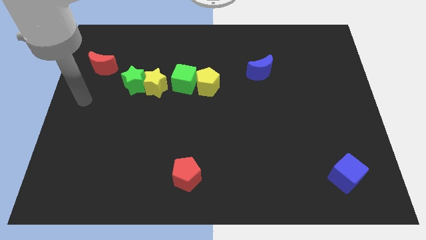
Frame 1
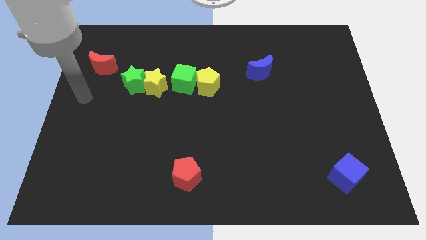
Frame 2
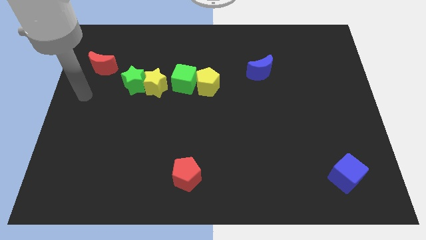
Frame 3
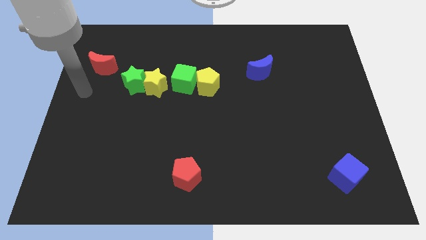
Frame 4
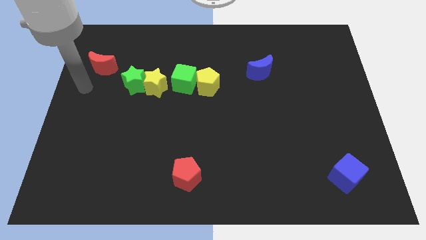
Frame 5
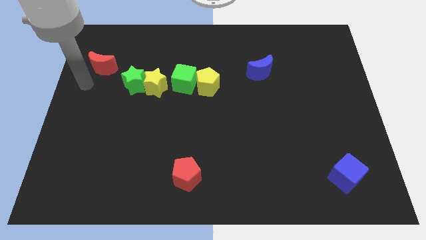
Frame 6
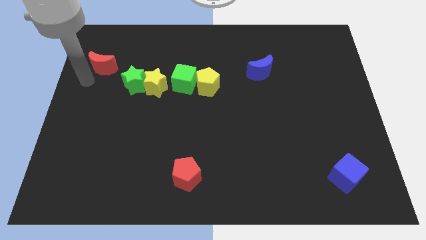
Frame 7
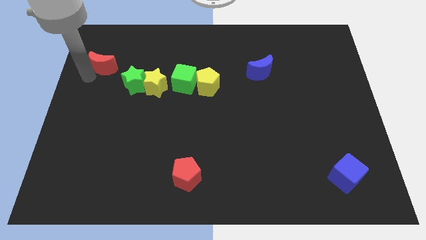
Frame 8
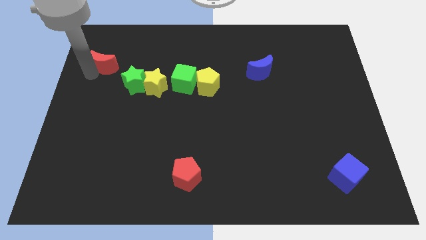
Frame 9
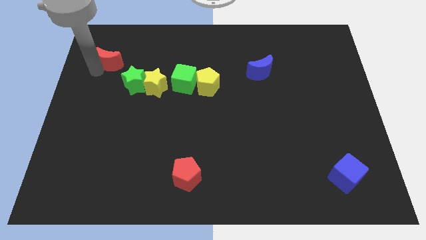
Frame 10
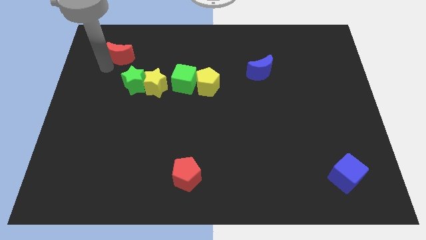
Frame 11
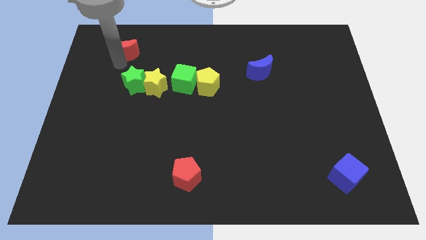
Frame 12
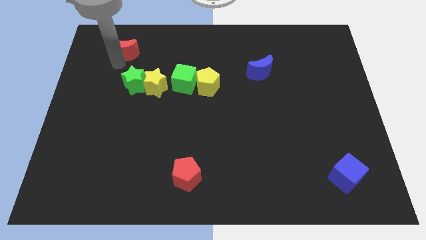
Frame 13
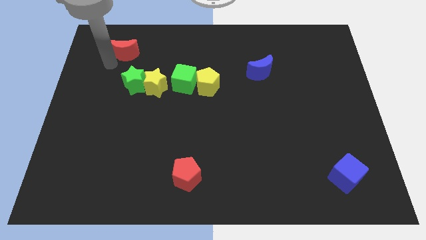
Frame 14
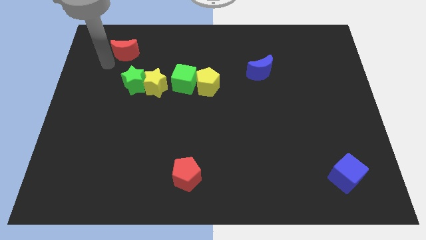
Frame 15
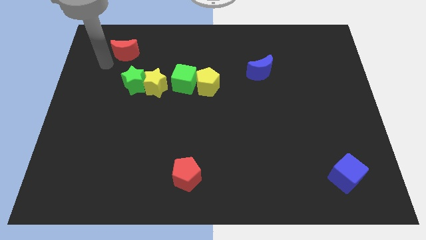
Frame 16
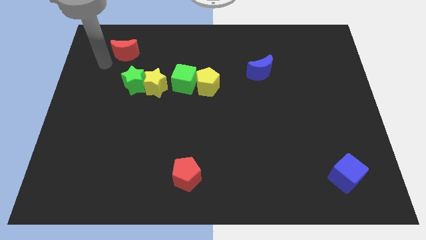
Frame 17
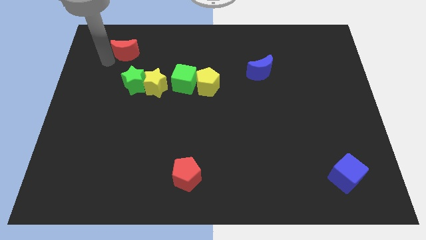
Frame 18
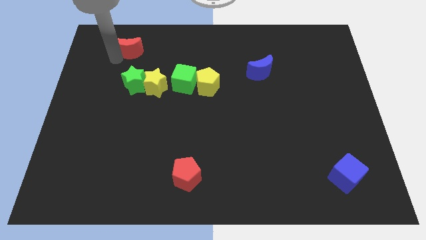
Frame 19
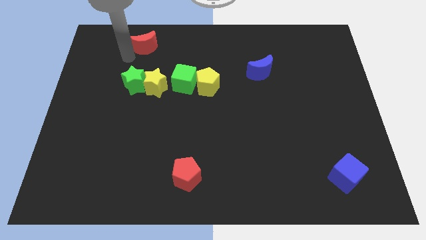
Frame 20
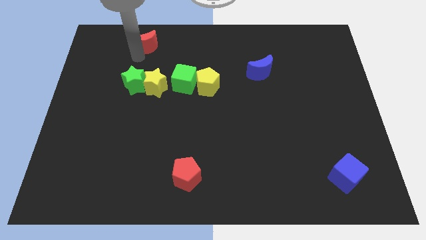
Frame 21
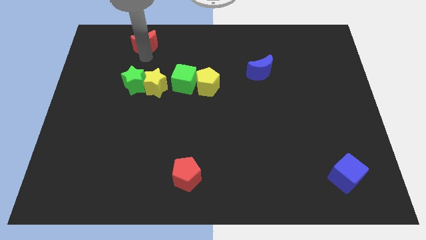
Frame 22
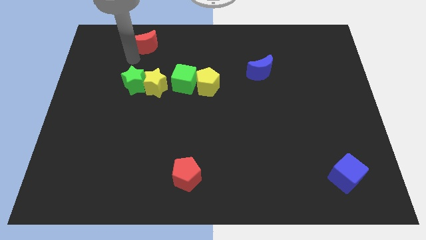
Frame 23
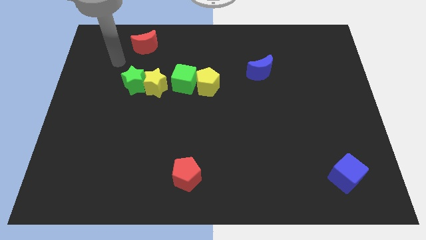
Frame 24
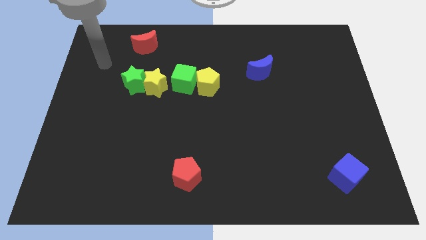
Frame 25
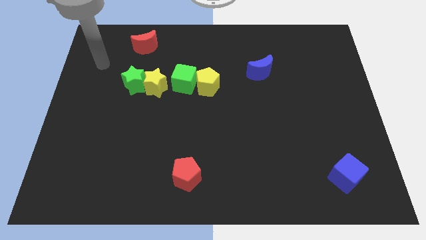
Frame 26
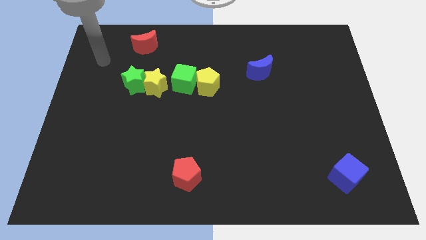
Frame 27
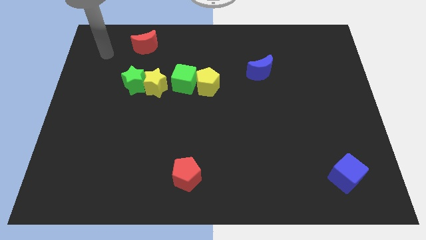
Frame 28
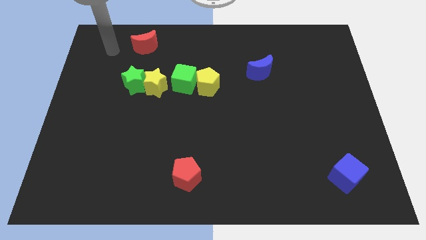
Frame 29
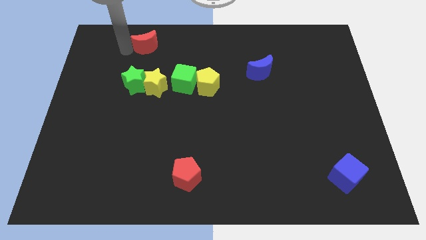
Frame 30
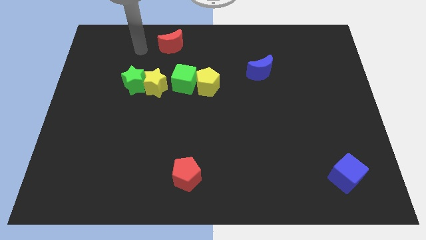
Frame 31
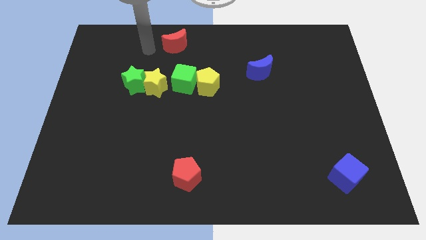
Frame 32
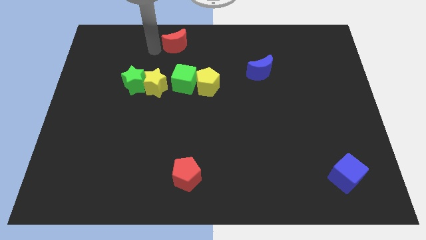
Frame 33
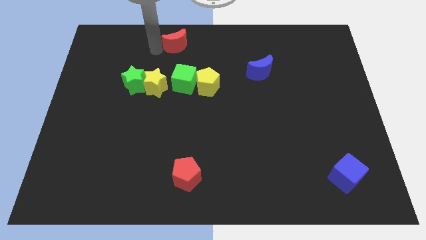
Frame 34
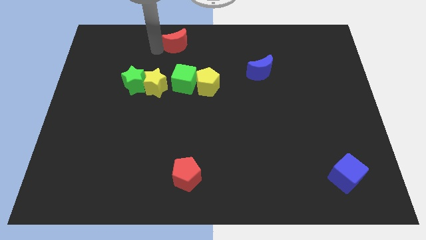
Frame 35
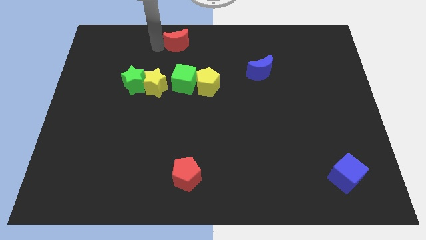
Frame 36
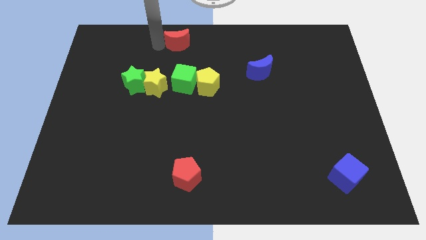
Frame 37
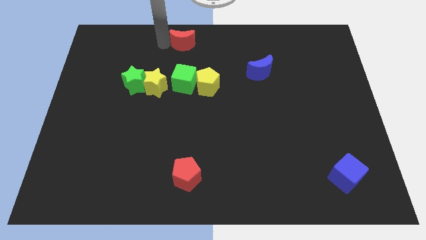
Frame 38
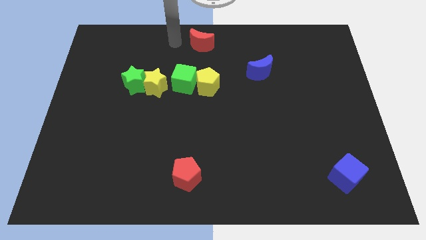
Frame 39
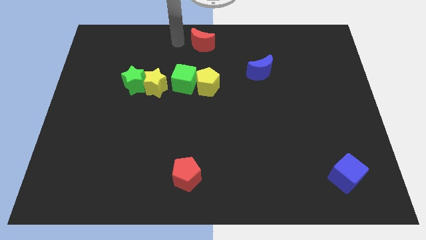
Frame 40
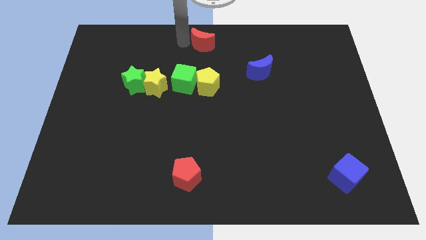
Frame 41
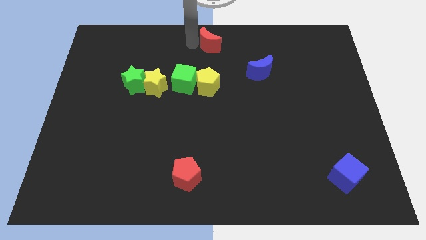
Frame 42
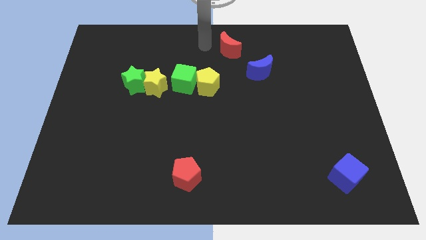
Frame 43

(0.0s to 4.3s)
separate red moon from green star

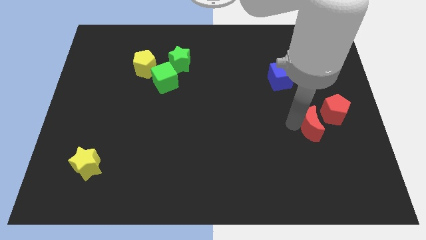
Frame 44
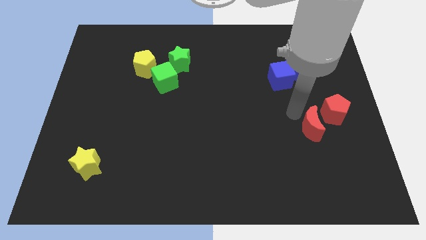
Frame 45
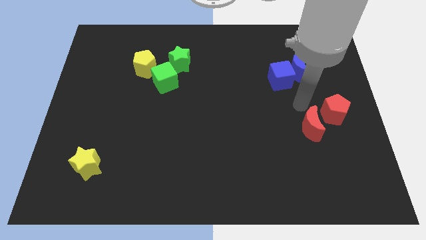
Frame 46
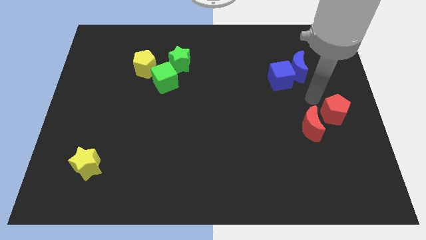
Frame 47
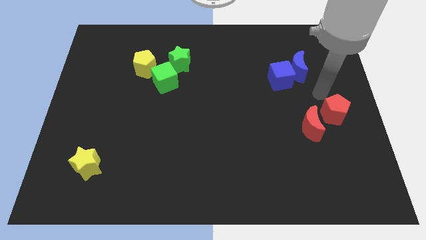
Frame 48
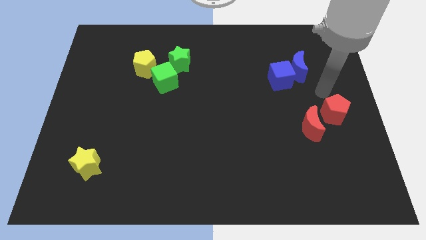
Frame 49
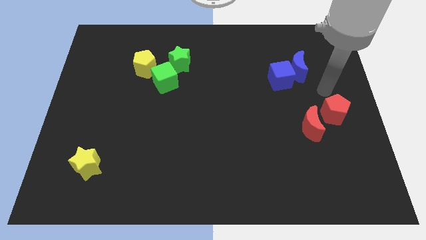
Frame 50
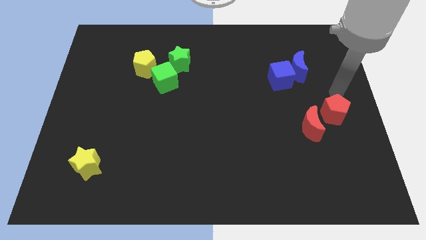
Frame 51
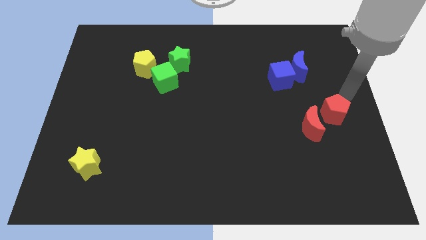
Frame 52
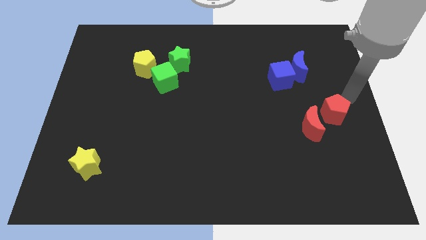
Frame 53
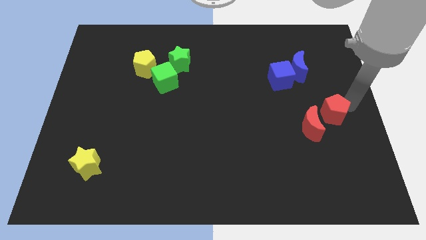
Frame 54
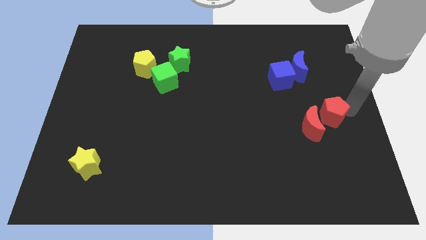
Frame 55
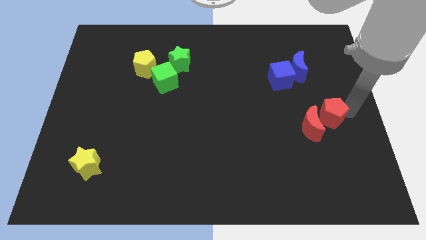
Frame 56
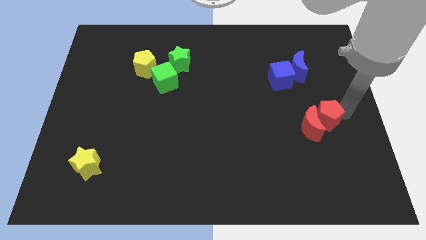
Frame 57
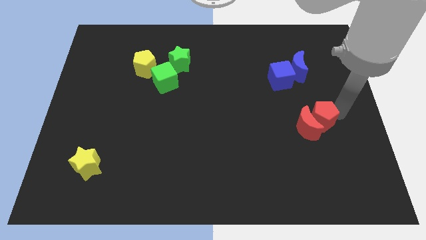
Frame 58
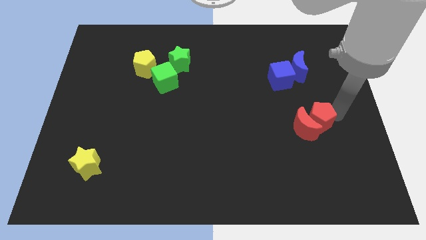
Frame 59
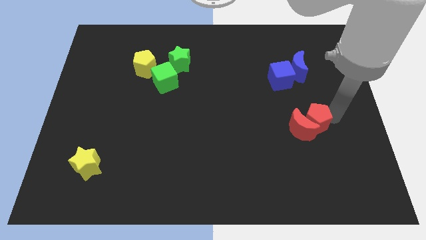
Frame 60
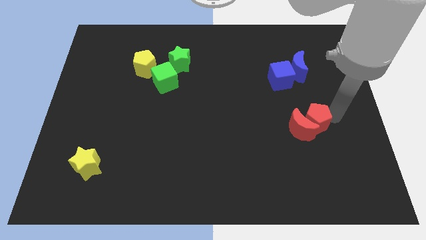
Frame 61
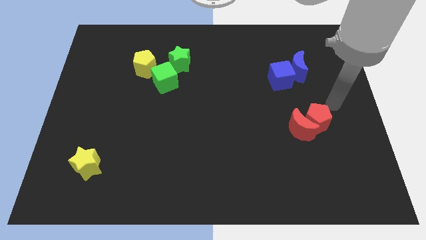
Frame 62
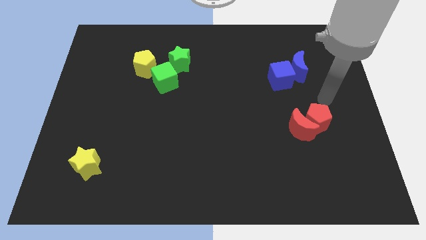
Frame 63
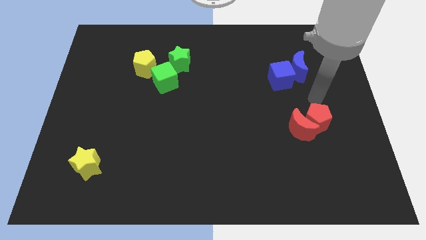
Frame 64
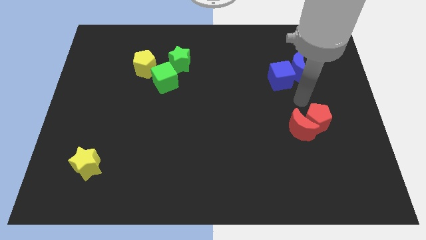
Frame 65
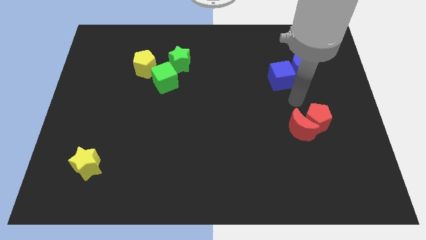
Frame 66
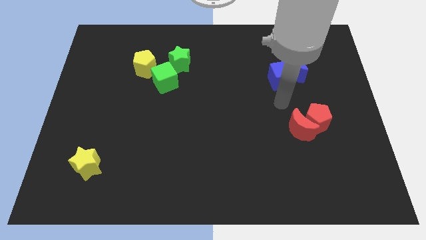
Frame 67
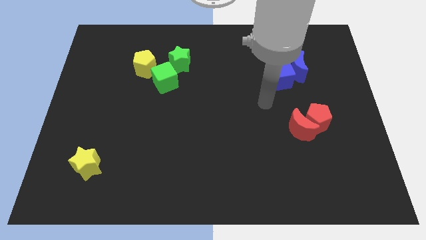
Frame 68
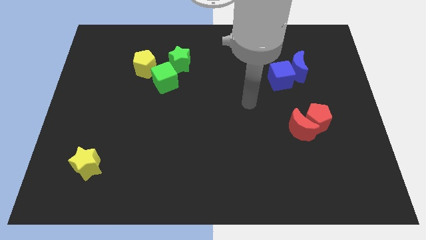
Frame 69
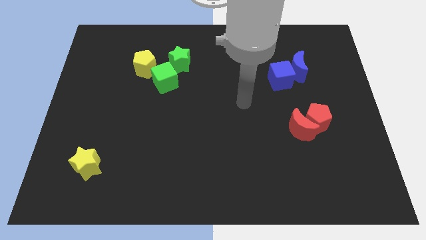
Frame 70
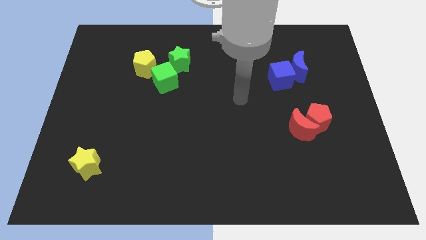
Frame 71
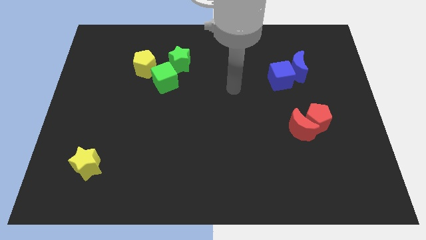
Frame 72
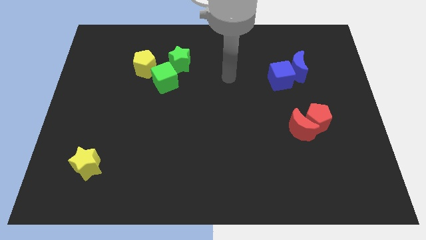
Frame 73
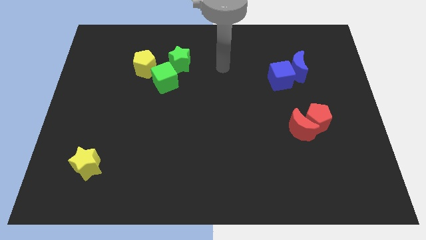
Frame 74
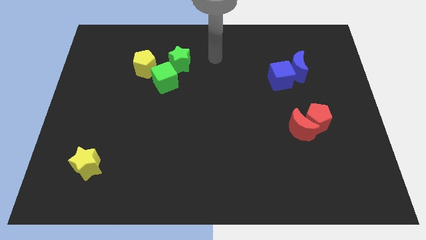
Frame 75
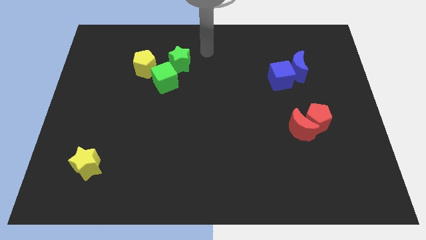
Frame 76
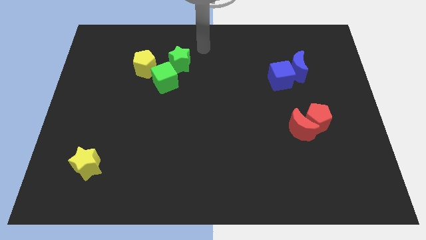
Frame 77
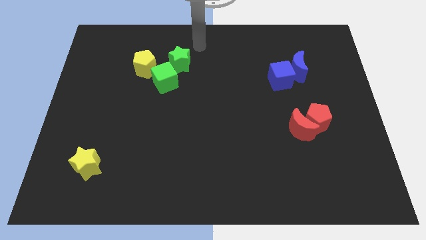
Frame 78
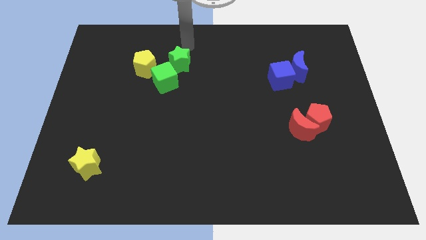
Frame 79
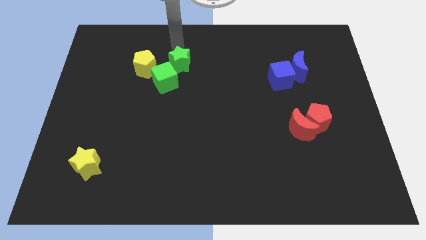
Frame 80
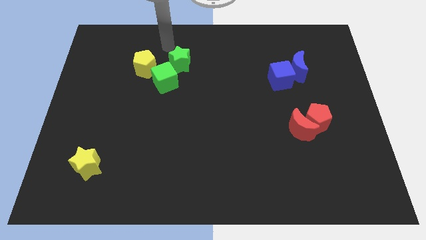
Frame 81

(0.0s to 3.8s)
slightly push the red blocks towards the bottom and move away

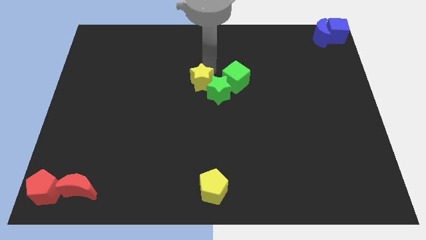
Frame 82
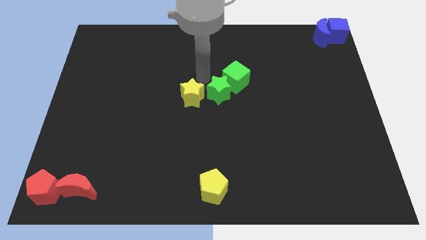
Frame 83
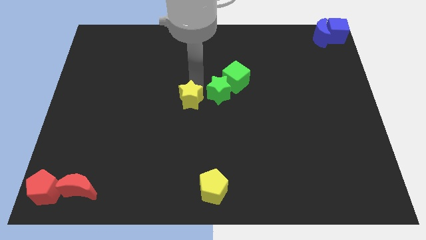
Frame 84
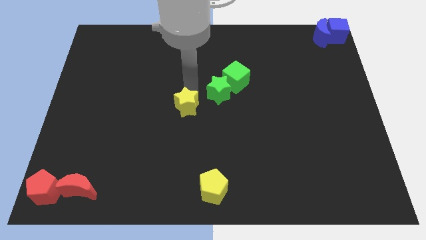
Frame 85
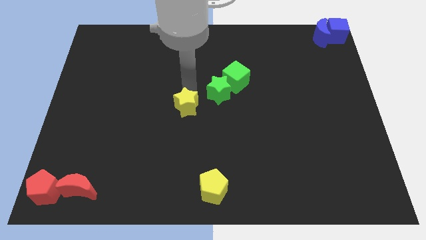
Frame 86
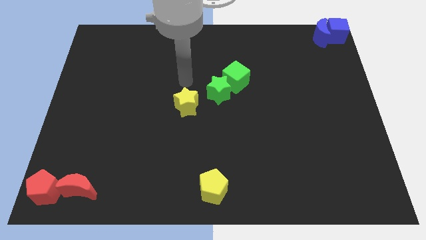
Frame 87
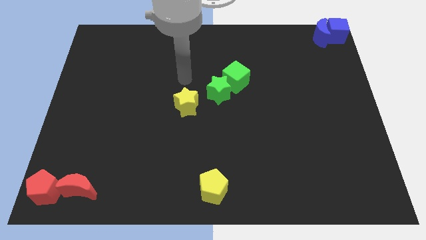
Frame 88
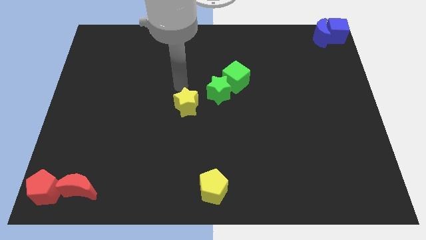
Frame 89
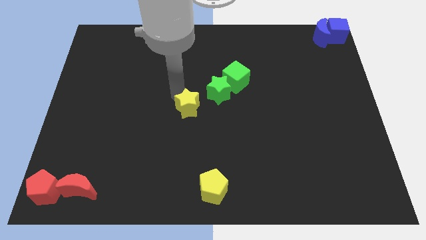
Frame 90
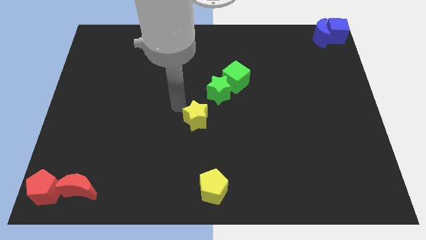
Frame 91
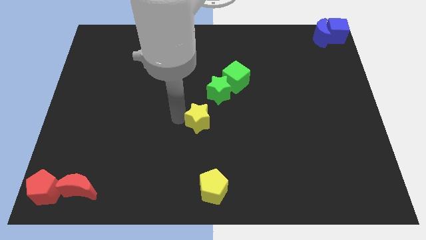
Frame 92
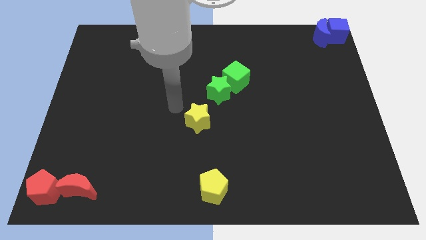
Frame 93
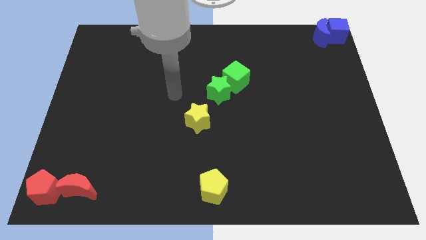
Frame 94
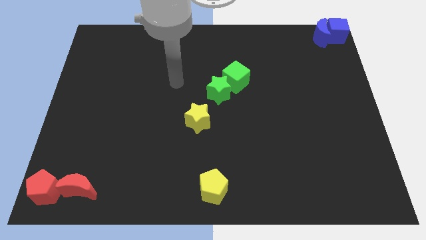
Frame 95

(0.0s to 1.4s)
move the yellow star to the center of the board
